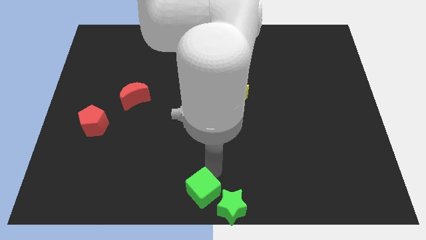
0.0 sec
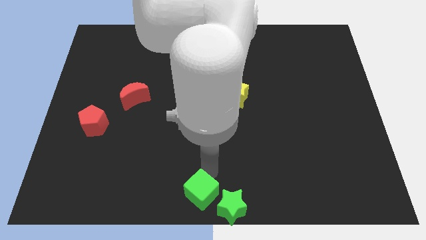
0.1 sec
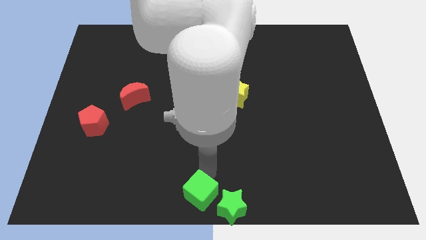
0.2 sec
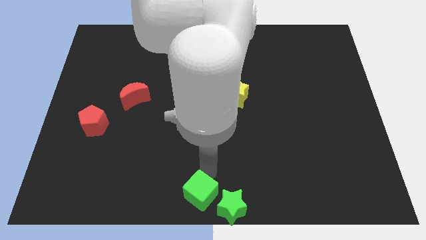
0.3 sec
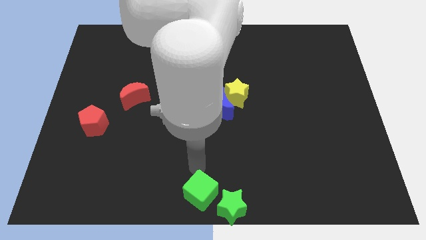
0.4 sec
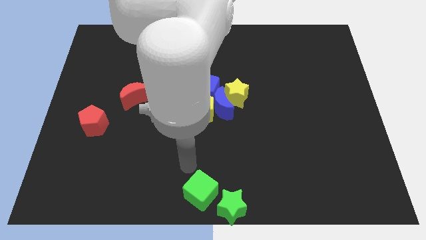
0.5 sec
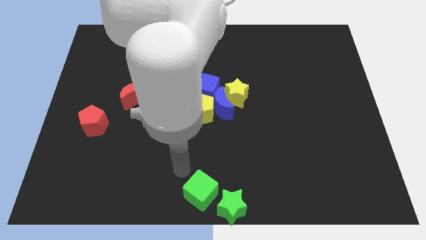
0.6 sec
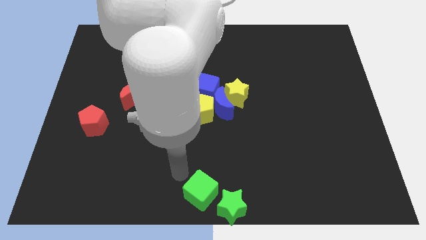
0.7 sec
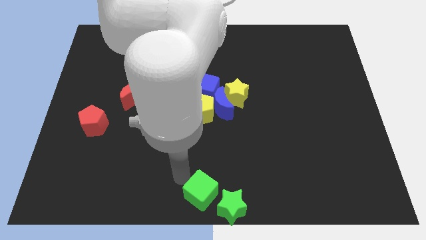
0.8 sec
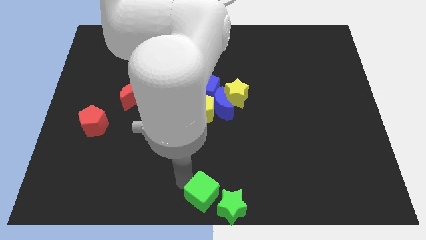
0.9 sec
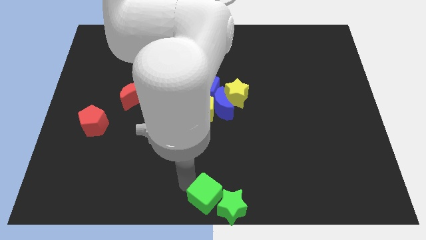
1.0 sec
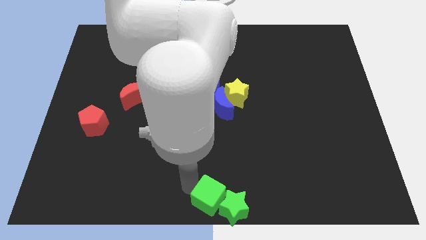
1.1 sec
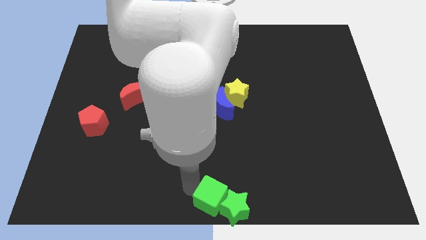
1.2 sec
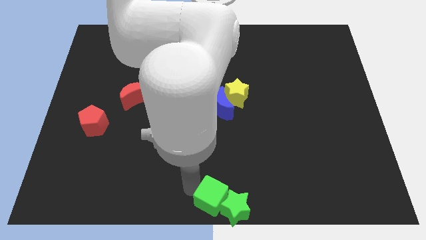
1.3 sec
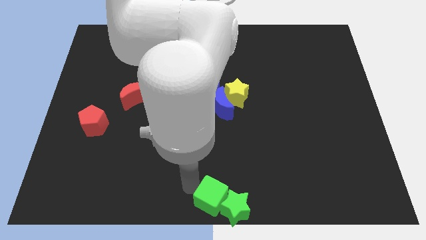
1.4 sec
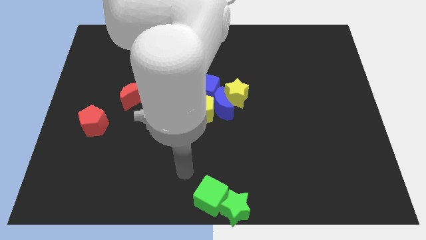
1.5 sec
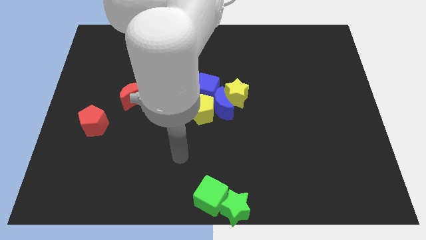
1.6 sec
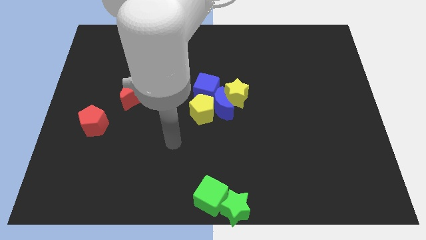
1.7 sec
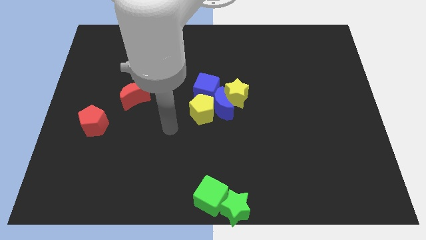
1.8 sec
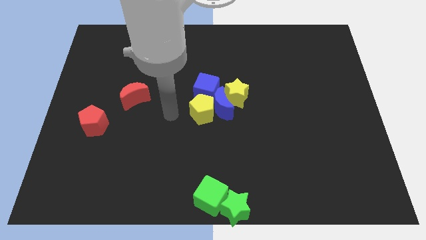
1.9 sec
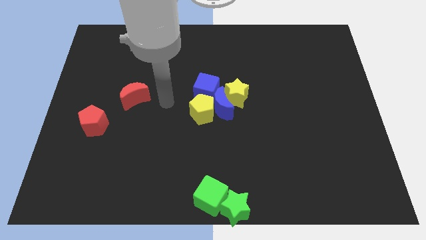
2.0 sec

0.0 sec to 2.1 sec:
slide the green cube into the green star

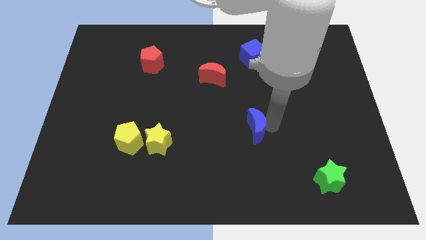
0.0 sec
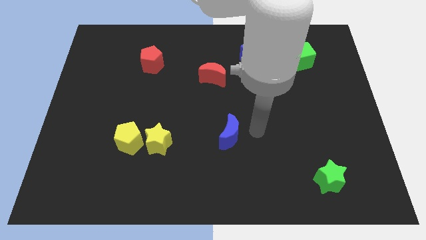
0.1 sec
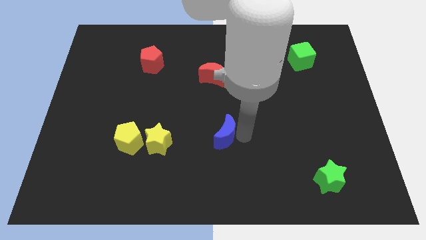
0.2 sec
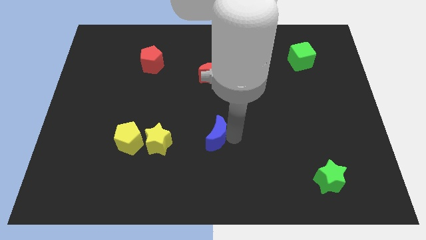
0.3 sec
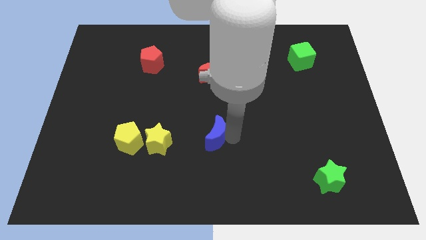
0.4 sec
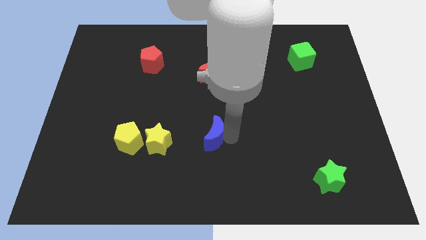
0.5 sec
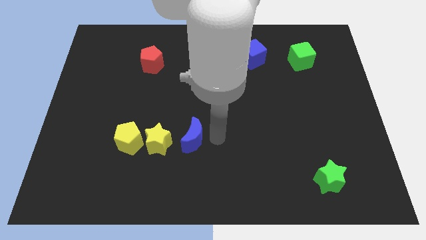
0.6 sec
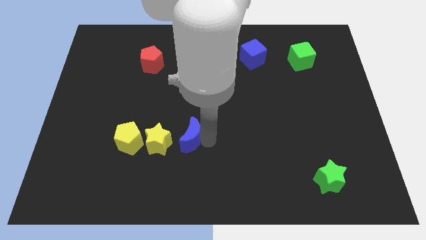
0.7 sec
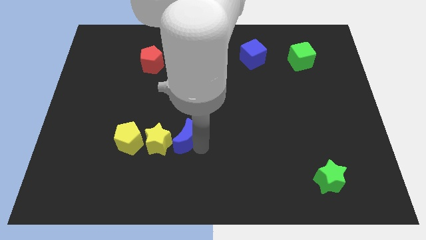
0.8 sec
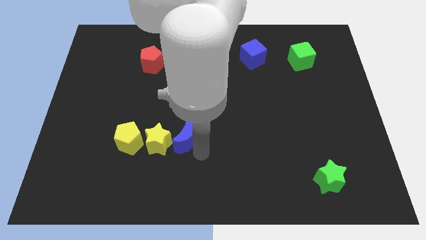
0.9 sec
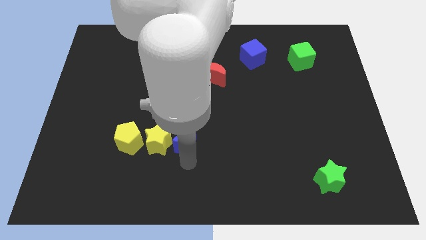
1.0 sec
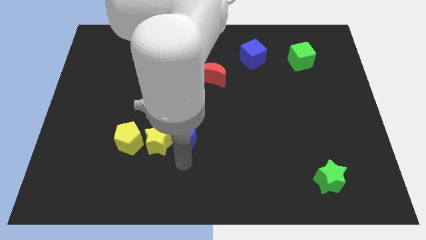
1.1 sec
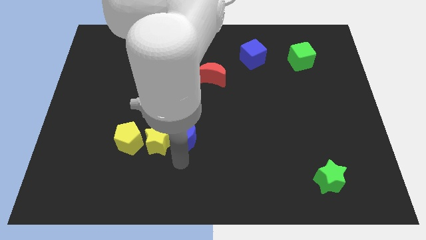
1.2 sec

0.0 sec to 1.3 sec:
push the blue crescent into the yellow star

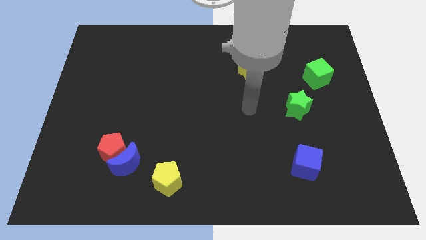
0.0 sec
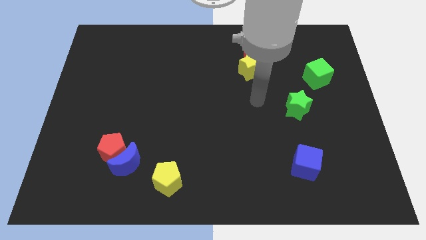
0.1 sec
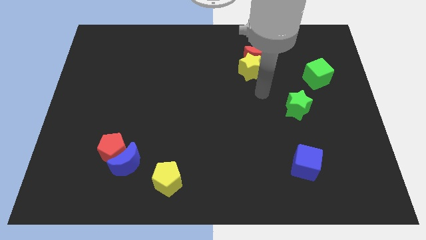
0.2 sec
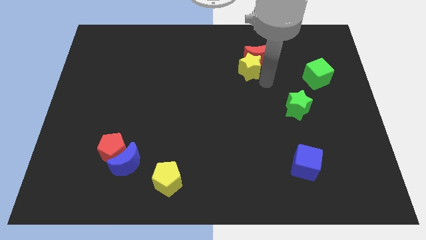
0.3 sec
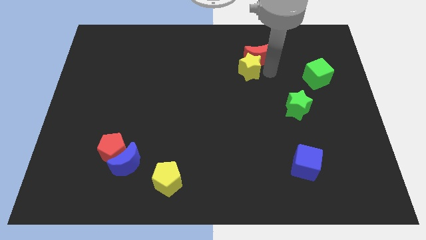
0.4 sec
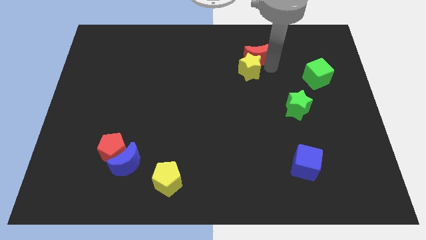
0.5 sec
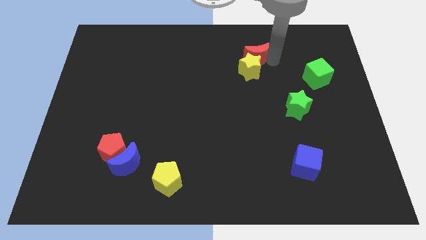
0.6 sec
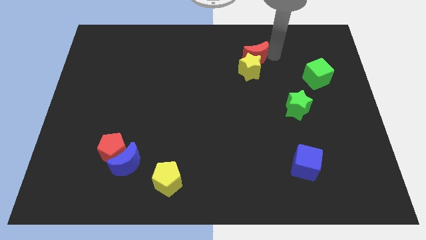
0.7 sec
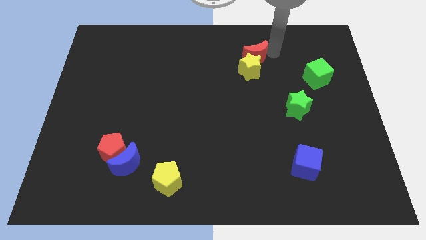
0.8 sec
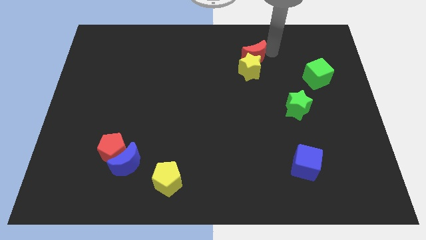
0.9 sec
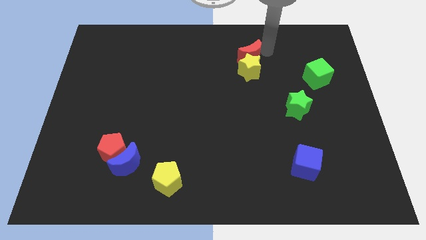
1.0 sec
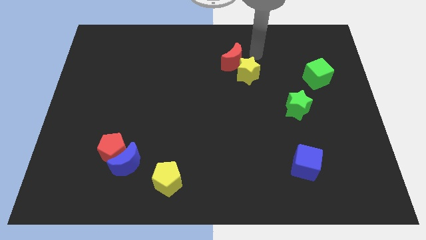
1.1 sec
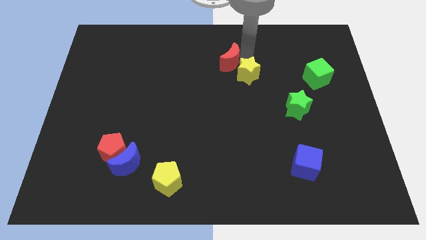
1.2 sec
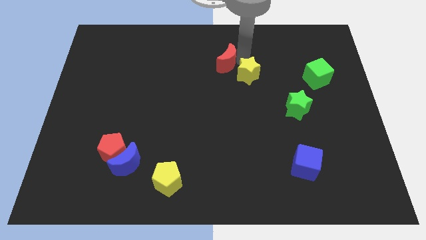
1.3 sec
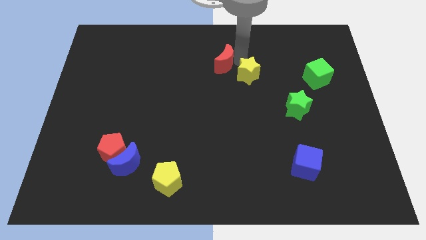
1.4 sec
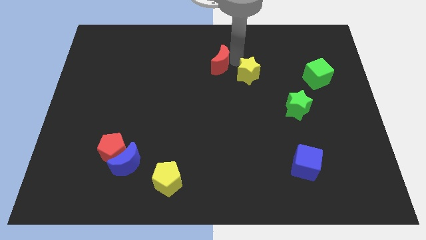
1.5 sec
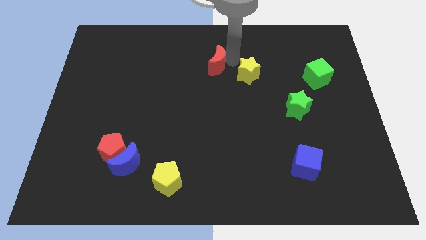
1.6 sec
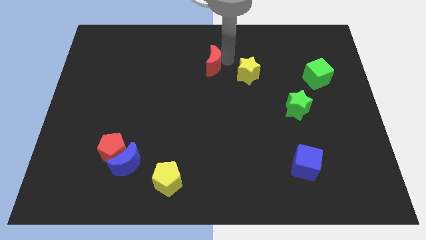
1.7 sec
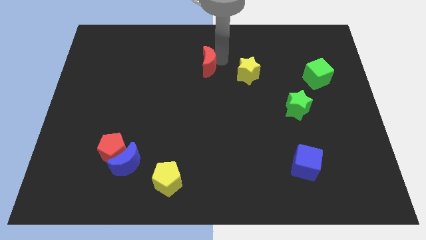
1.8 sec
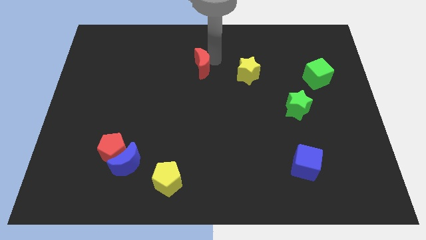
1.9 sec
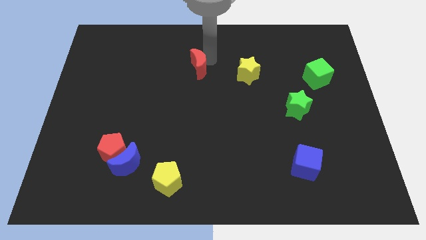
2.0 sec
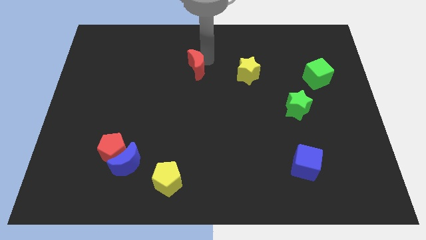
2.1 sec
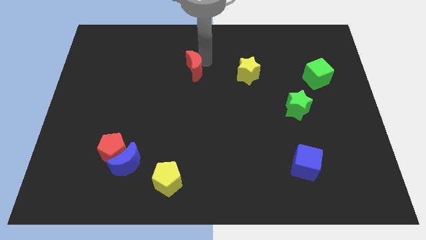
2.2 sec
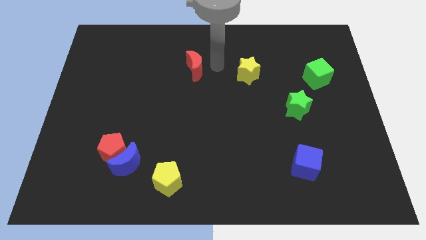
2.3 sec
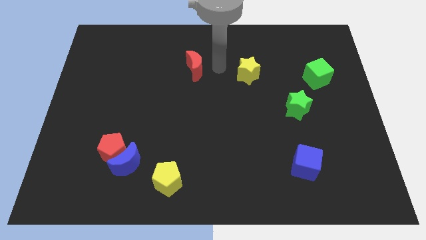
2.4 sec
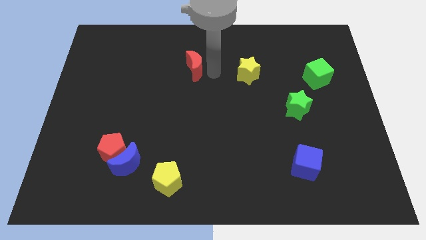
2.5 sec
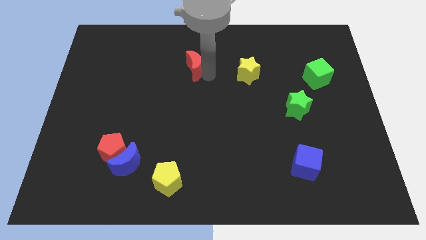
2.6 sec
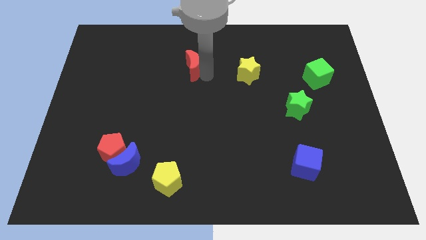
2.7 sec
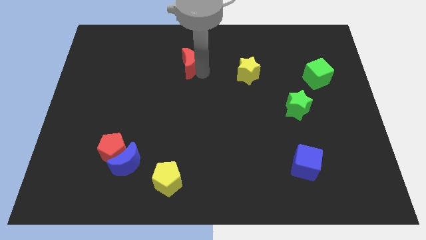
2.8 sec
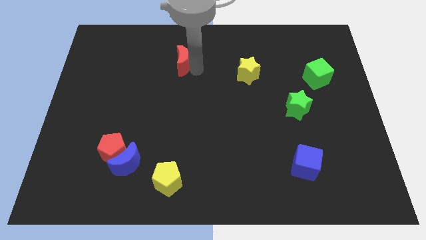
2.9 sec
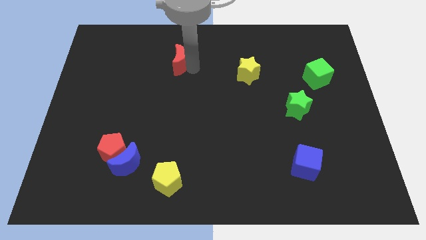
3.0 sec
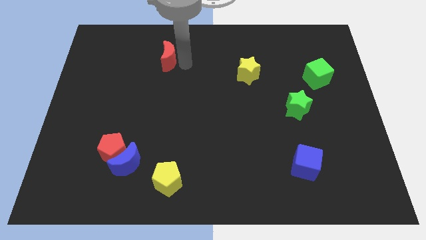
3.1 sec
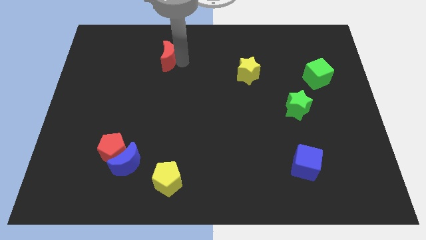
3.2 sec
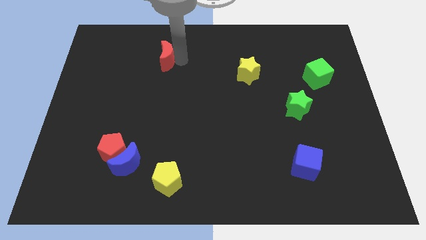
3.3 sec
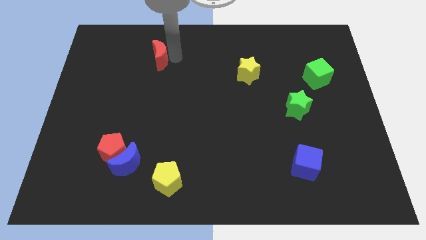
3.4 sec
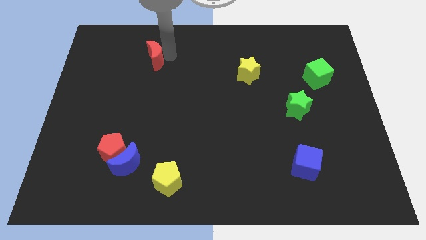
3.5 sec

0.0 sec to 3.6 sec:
push the red moon slightly to the left side of the board

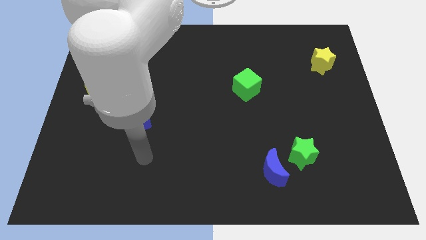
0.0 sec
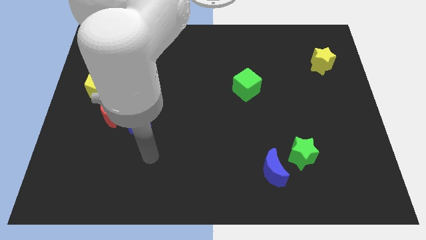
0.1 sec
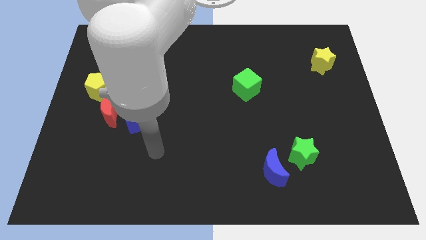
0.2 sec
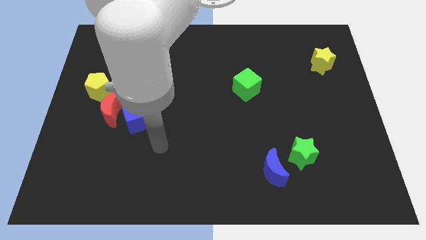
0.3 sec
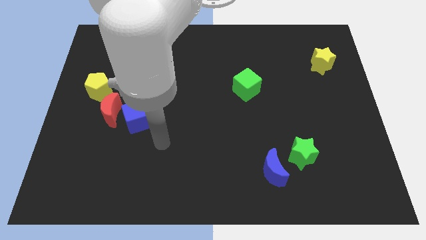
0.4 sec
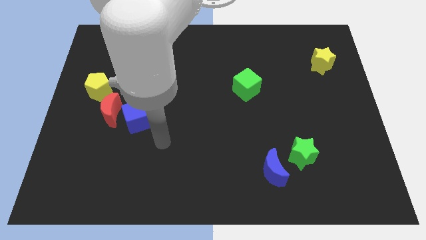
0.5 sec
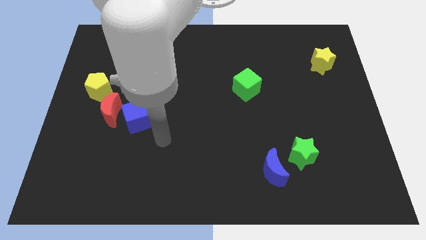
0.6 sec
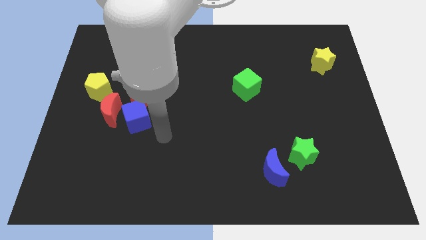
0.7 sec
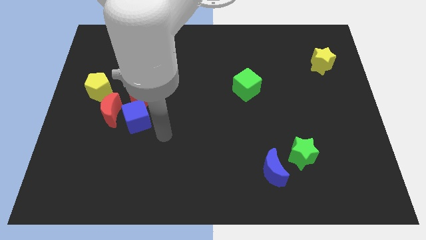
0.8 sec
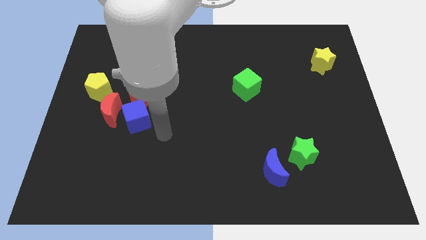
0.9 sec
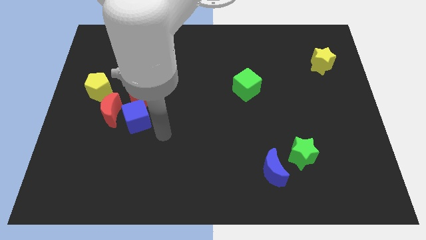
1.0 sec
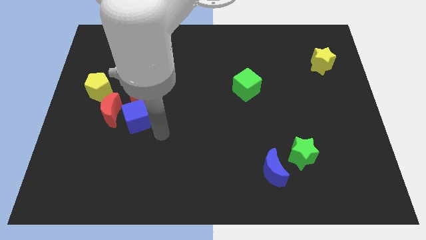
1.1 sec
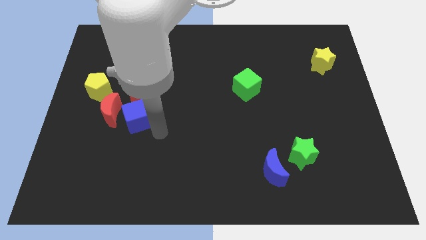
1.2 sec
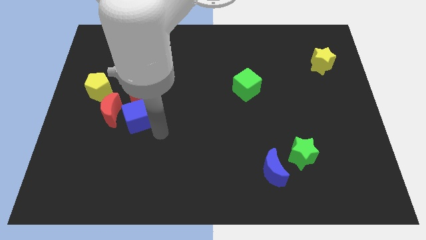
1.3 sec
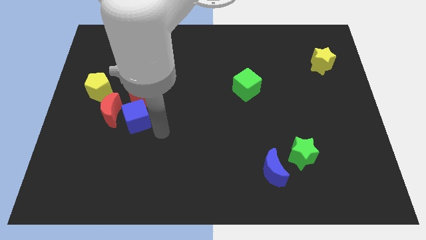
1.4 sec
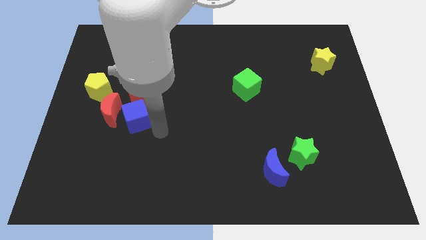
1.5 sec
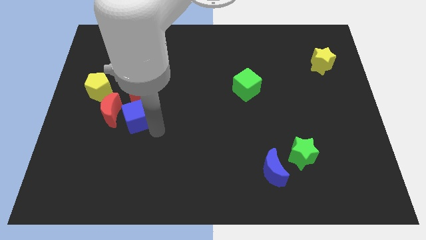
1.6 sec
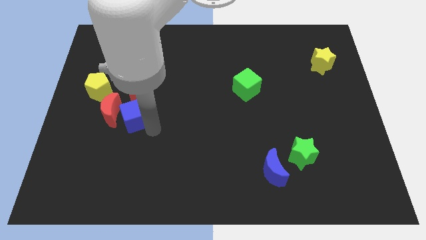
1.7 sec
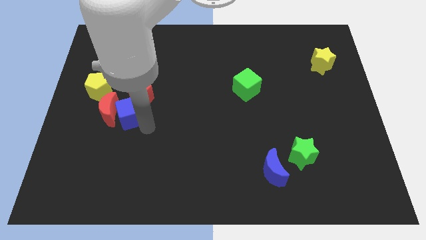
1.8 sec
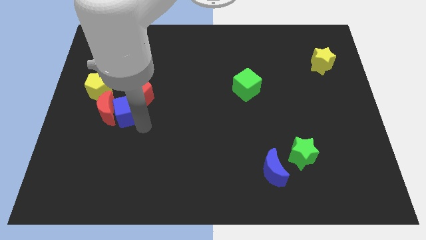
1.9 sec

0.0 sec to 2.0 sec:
push the blue cube into the red crescent

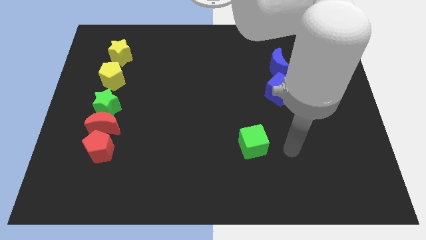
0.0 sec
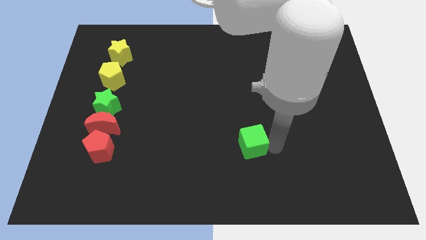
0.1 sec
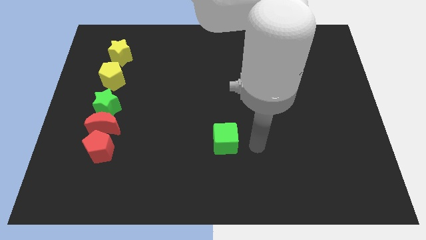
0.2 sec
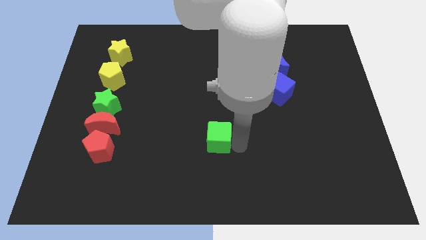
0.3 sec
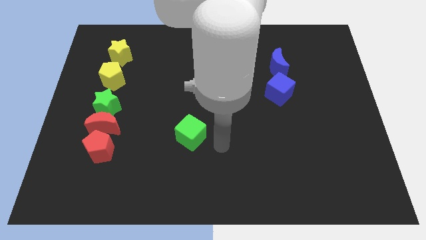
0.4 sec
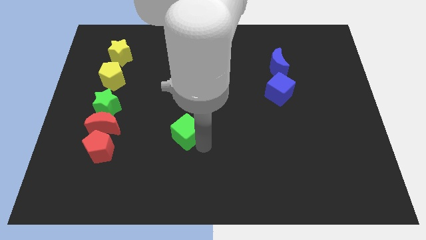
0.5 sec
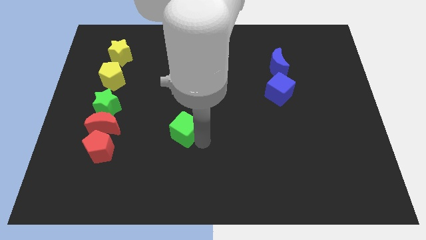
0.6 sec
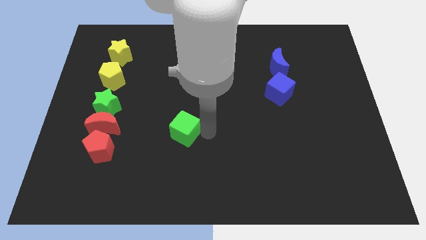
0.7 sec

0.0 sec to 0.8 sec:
move green cube towards the red moon
